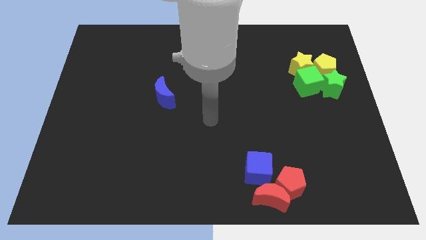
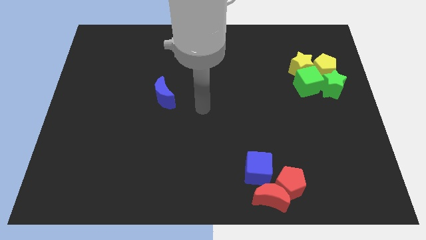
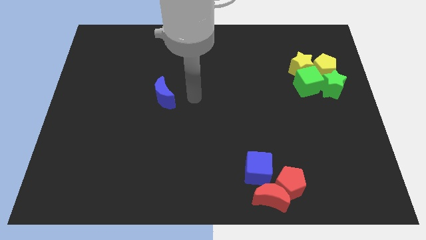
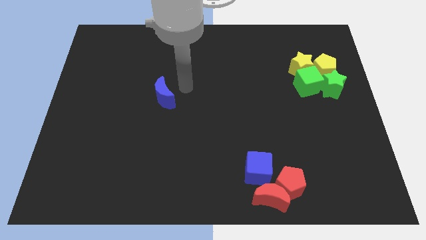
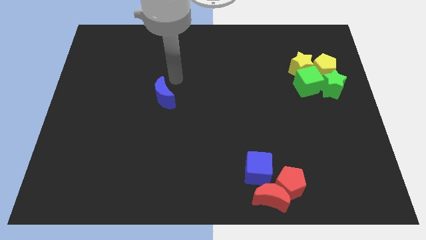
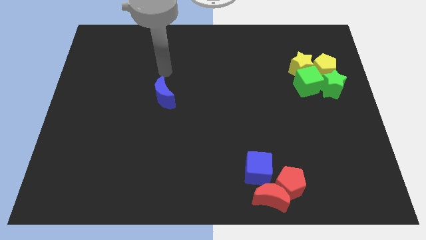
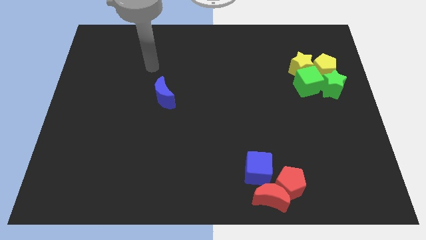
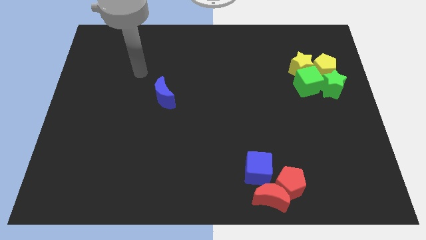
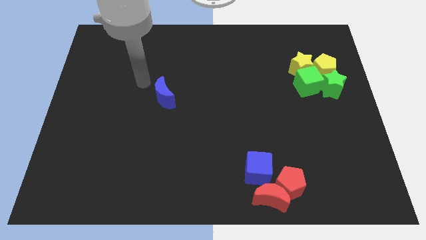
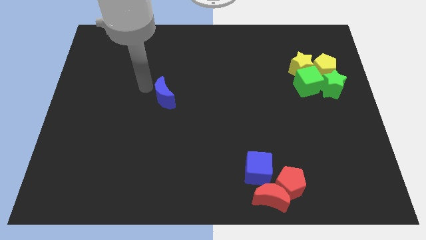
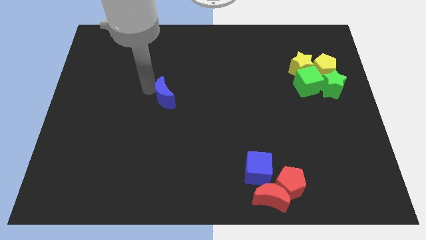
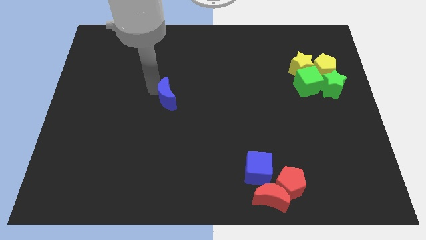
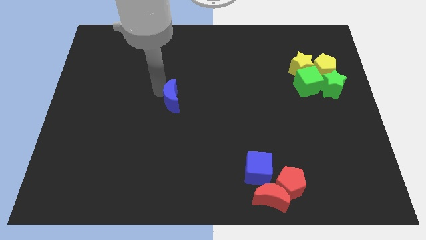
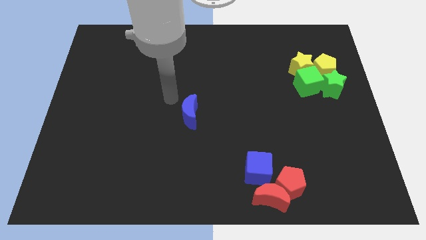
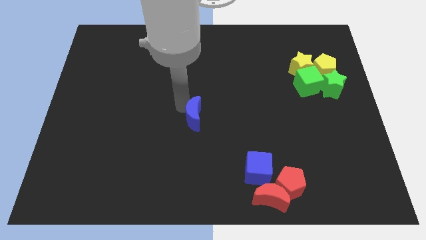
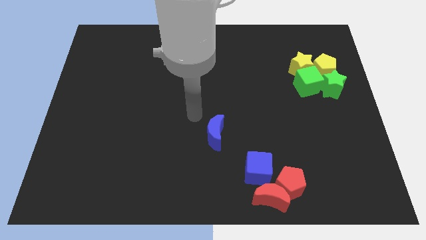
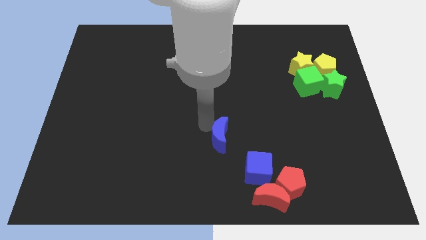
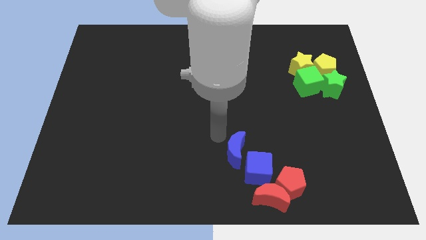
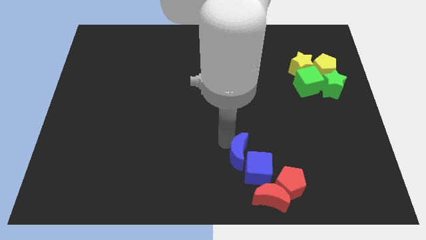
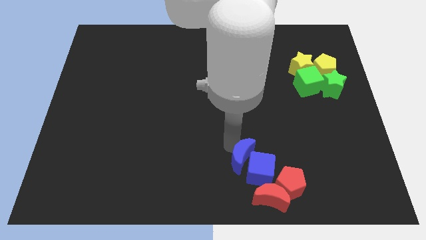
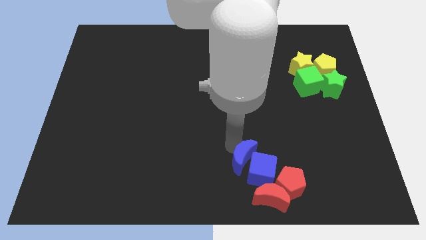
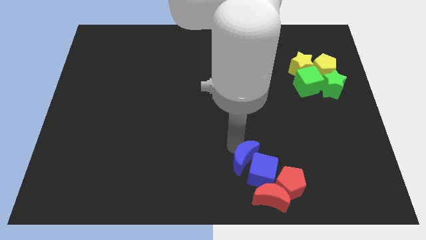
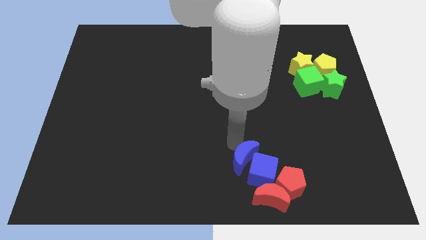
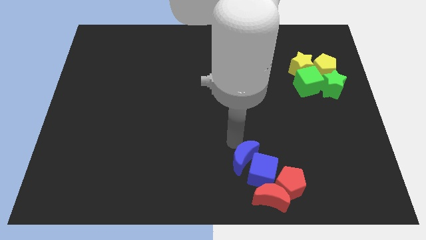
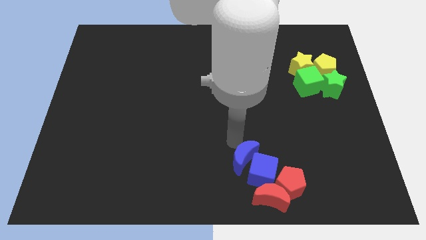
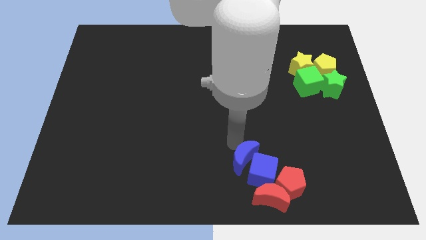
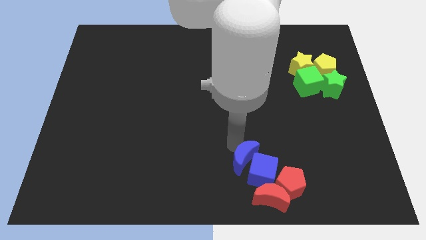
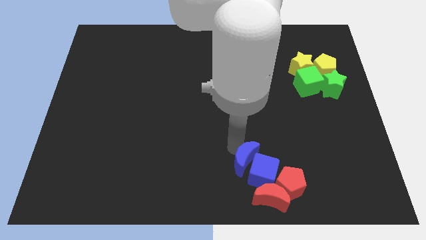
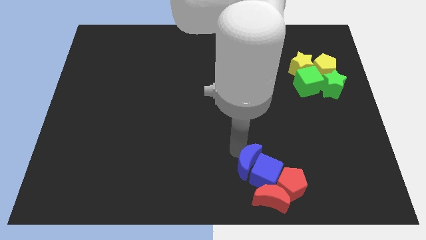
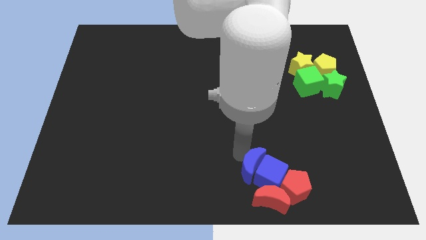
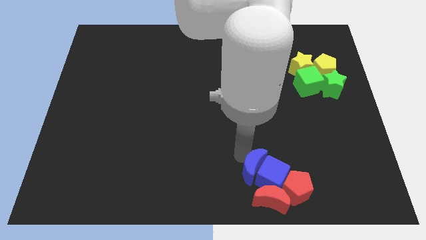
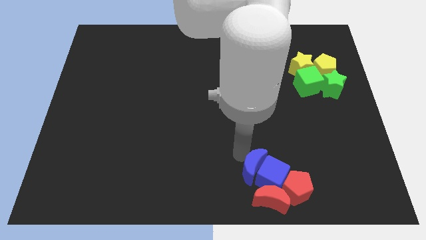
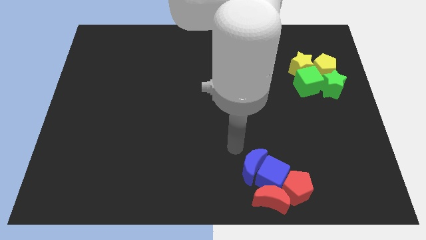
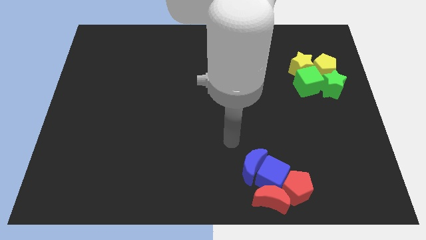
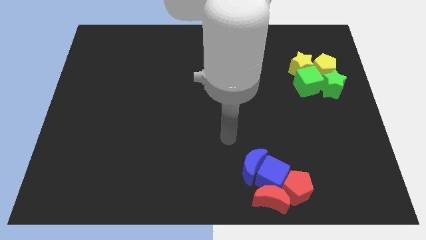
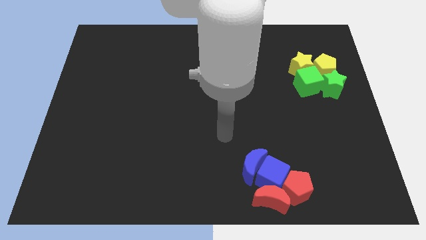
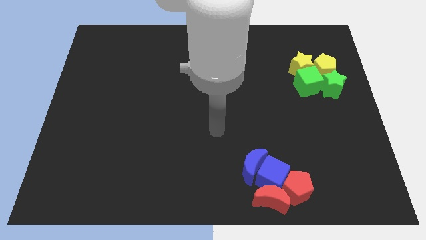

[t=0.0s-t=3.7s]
push blue crescent into the group of blue cube red crescent and red pentagon

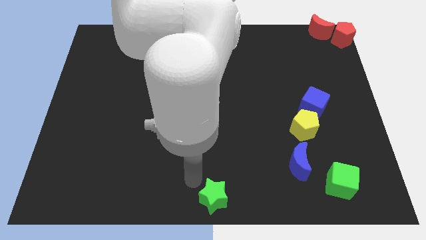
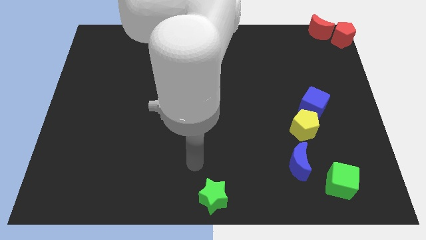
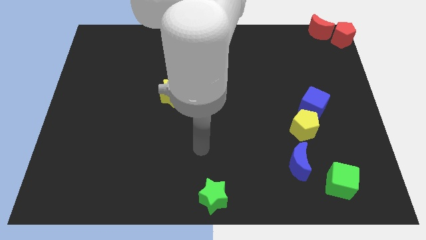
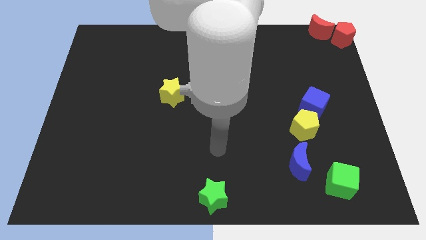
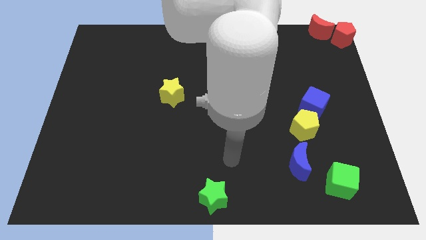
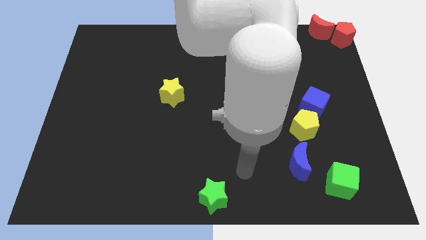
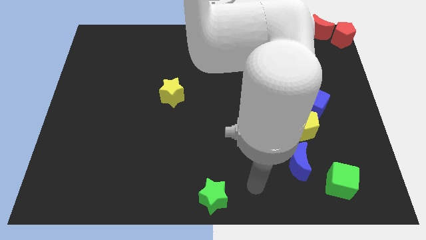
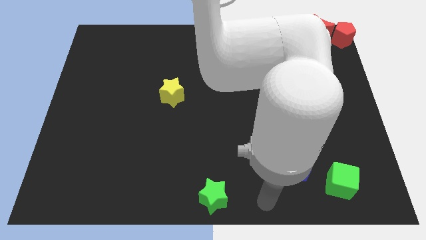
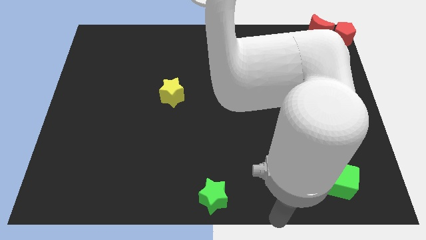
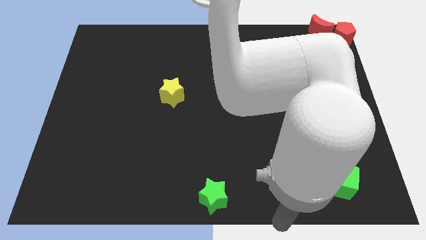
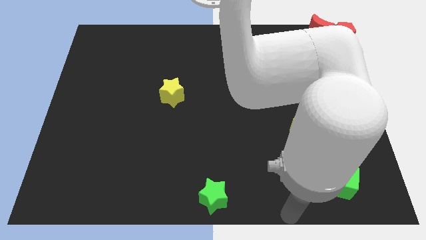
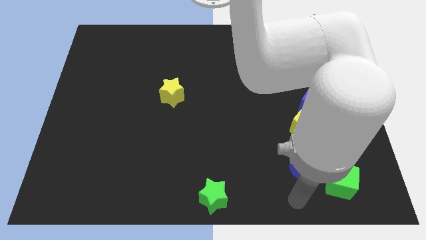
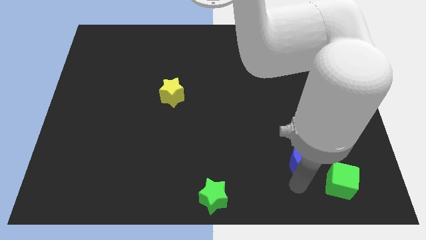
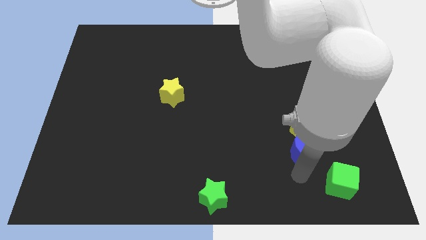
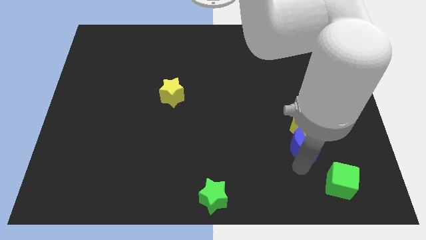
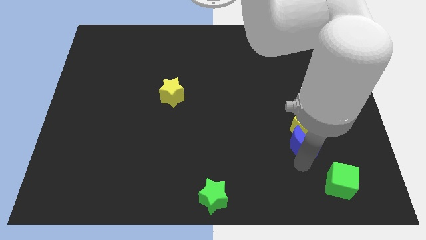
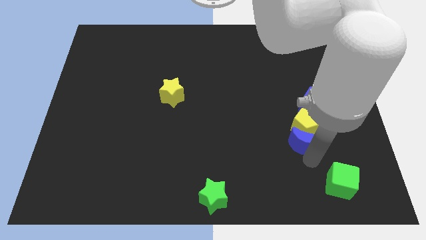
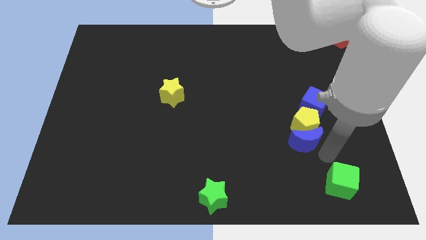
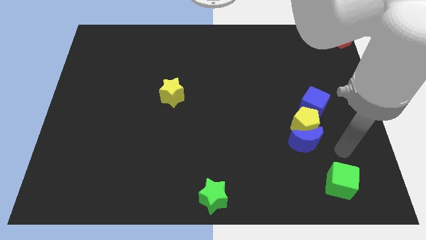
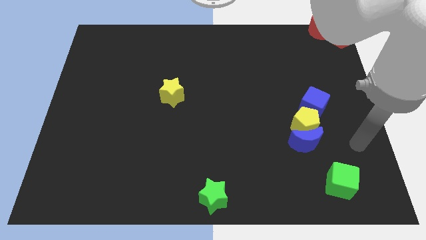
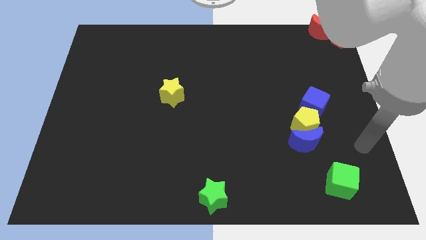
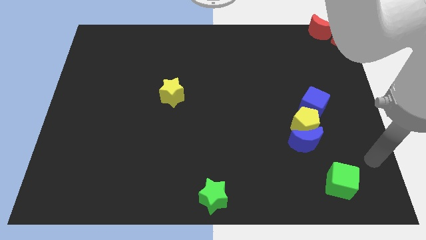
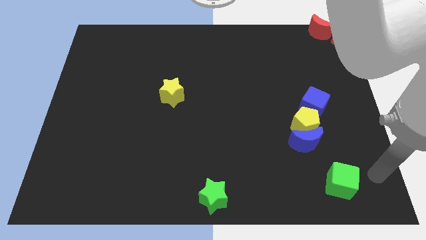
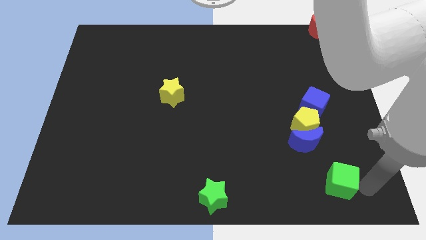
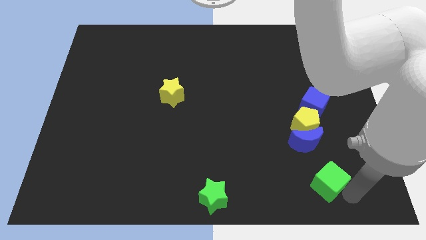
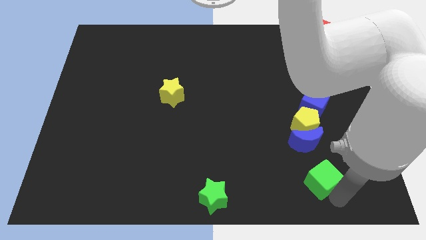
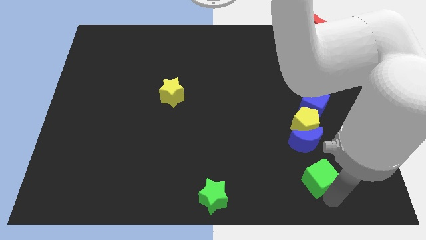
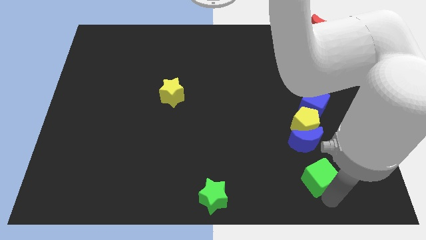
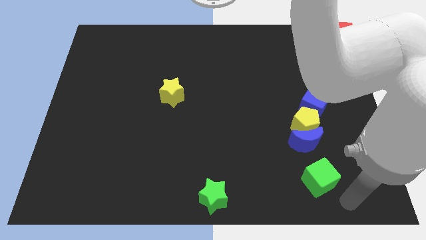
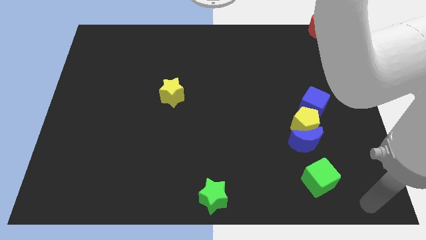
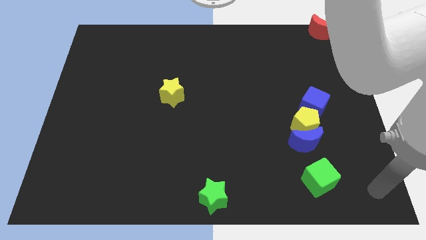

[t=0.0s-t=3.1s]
push the blue crescent to the yellow pentagon

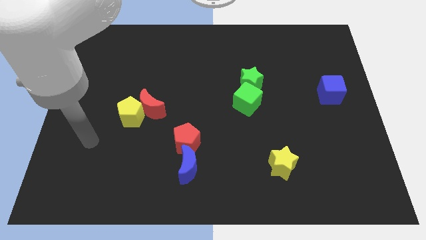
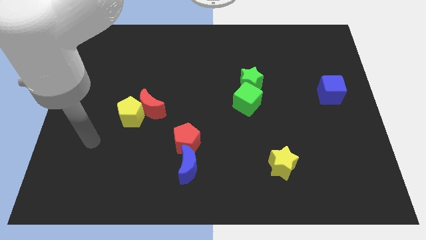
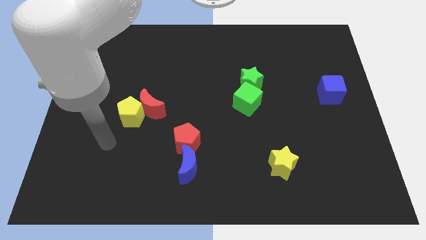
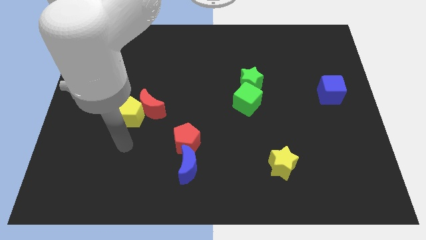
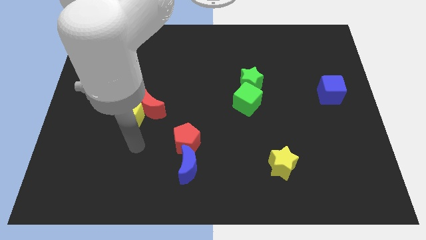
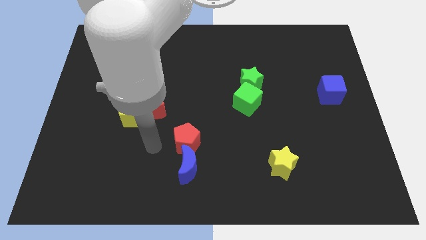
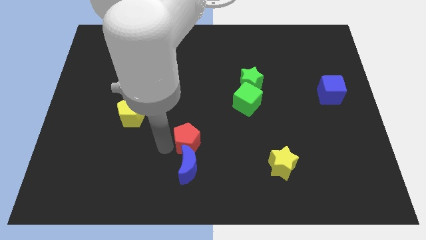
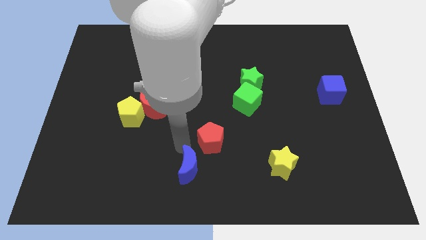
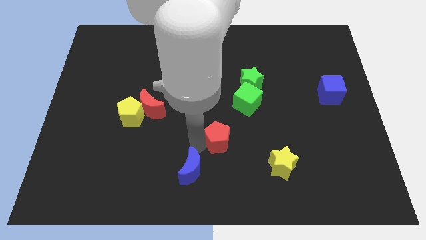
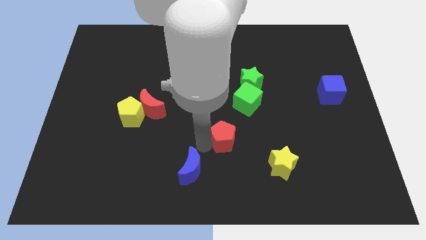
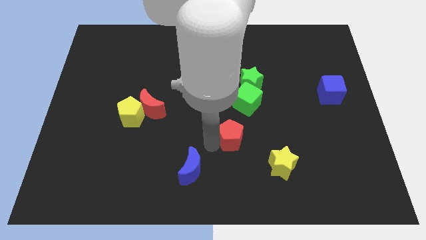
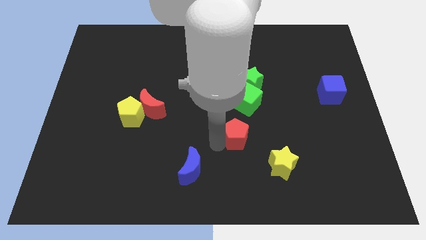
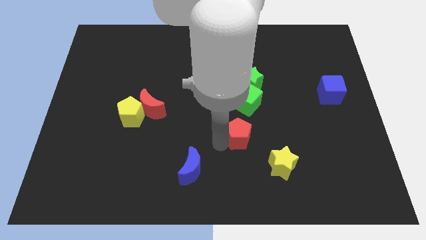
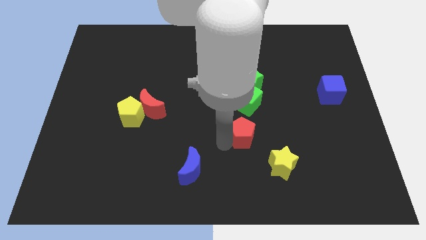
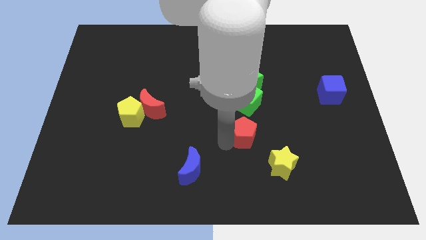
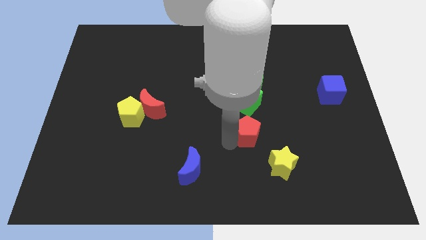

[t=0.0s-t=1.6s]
place the red pentagon below the green cube

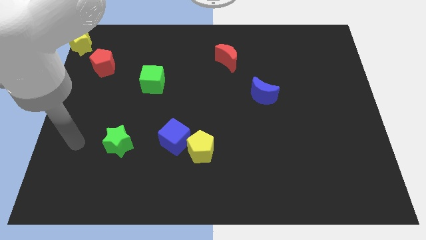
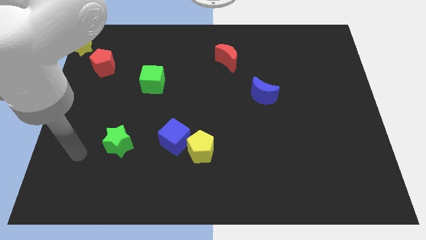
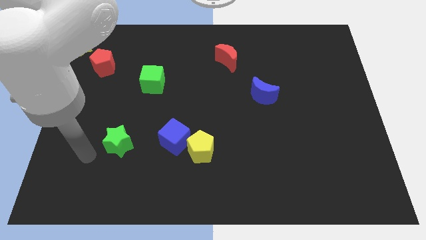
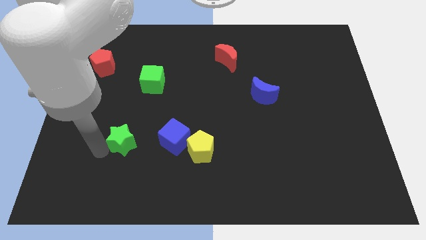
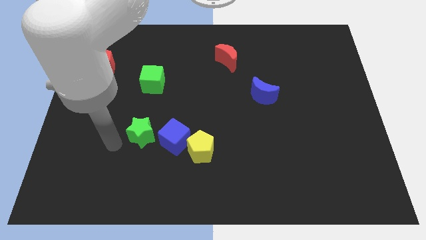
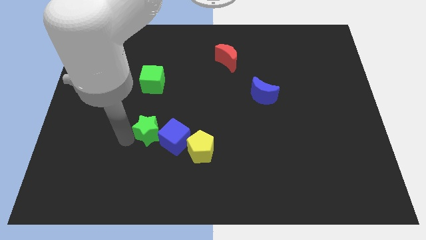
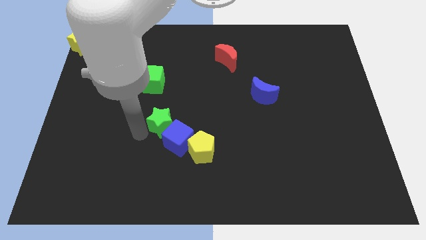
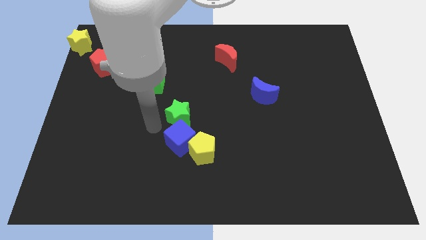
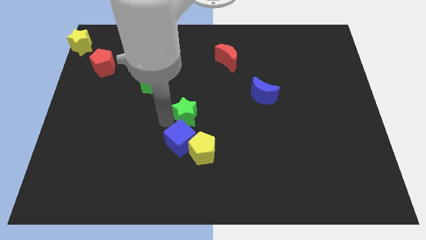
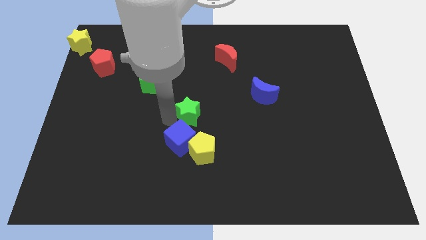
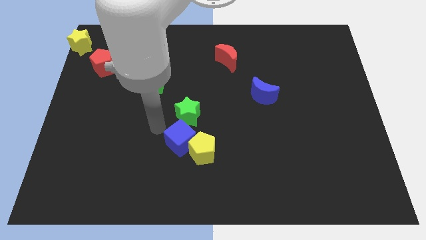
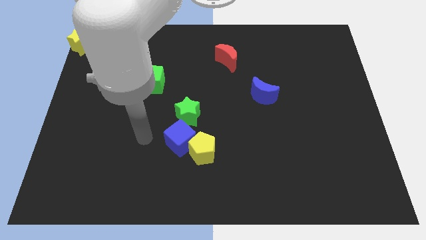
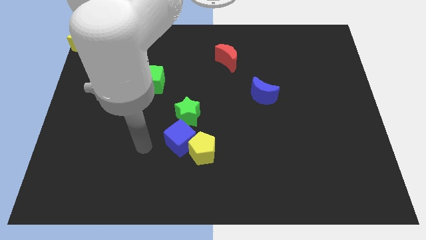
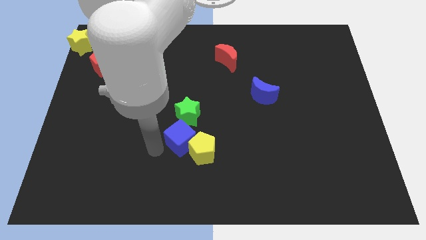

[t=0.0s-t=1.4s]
slide the green star to the top side of the blue cube
